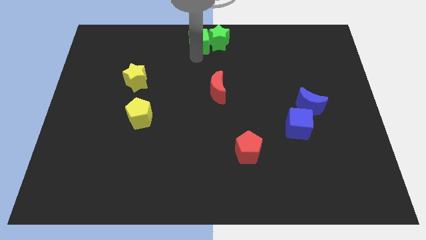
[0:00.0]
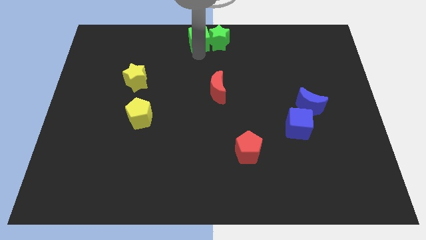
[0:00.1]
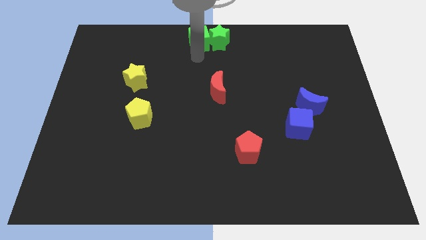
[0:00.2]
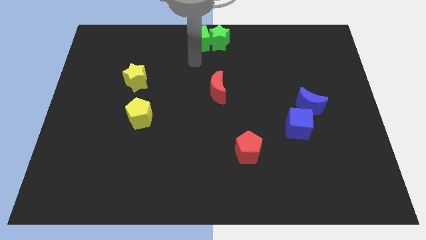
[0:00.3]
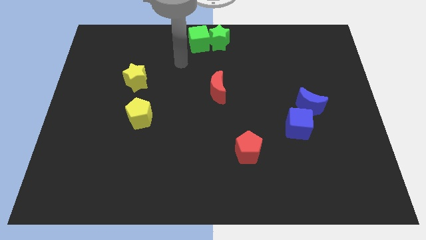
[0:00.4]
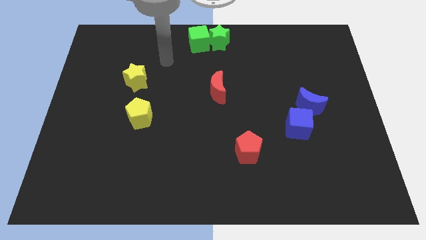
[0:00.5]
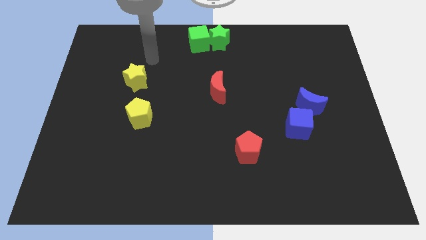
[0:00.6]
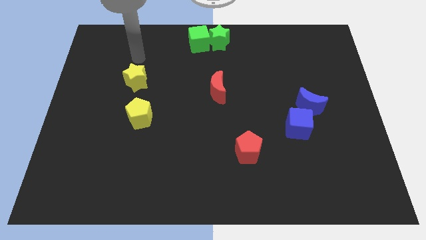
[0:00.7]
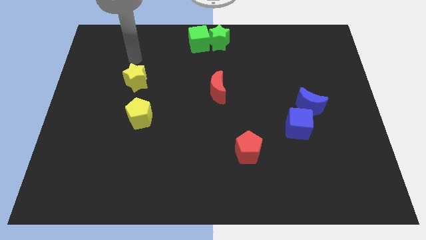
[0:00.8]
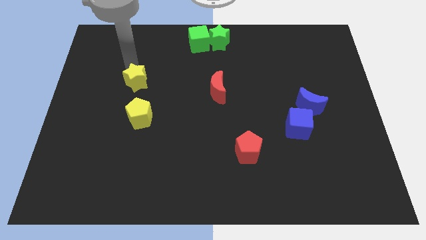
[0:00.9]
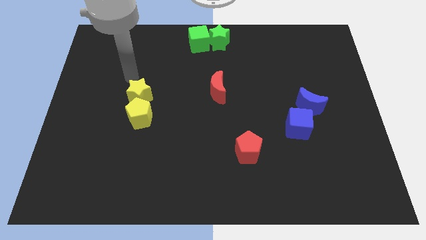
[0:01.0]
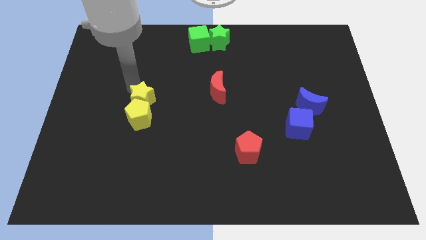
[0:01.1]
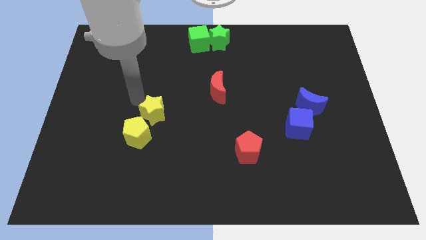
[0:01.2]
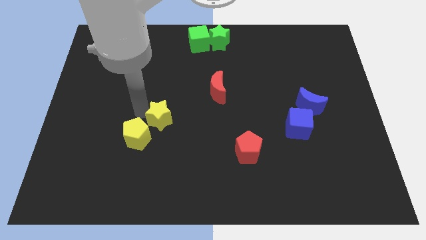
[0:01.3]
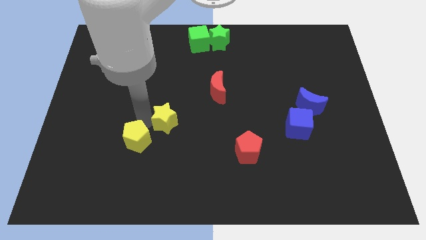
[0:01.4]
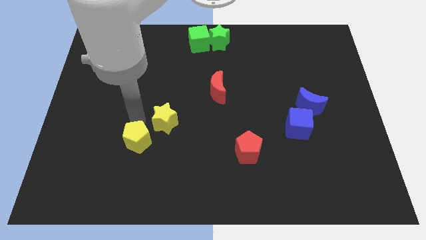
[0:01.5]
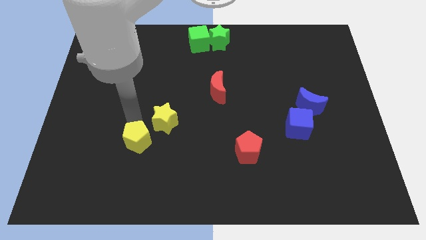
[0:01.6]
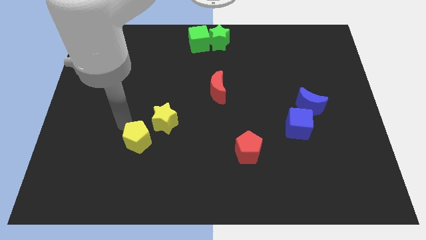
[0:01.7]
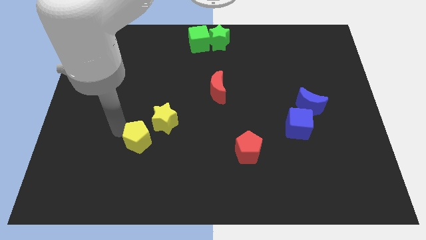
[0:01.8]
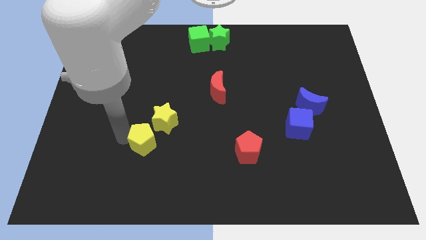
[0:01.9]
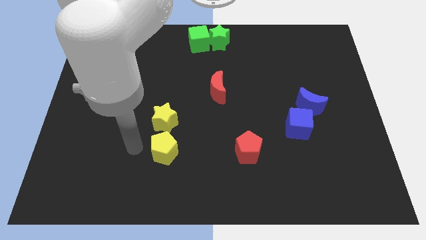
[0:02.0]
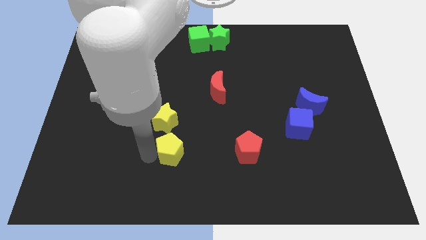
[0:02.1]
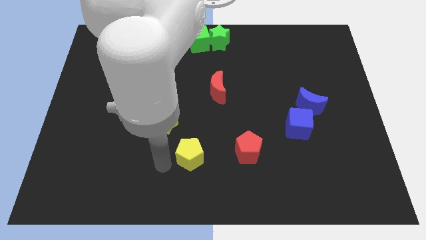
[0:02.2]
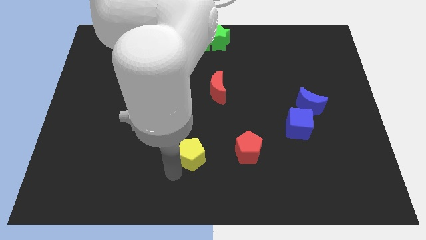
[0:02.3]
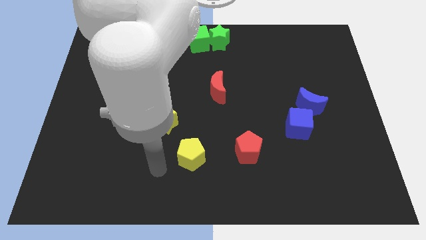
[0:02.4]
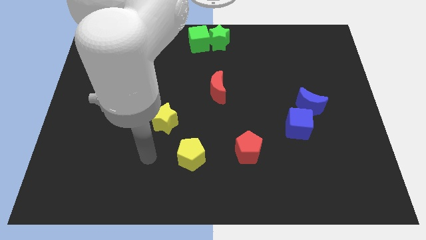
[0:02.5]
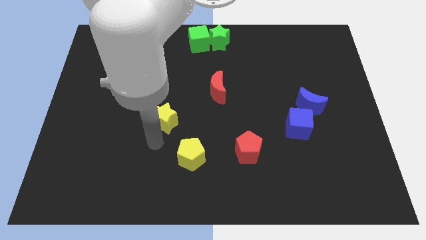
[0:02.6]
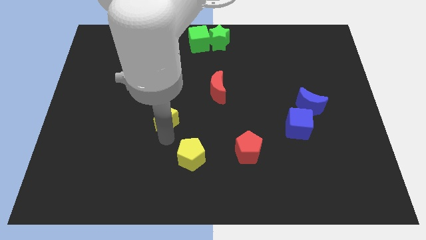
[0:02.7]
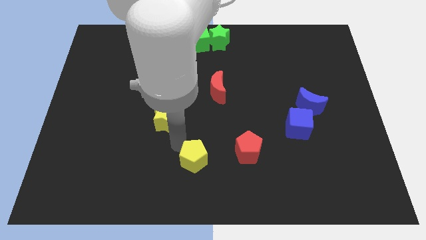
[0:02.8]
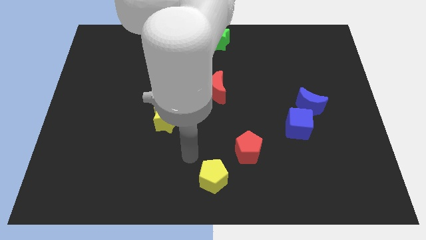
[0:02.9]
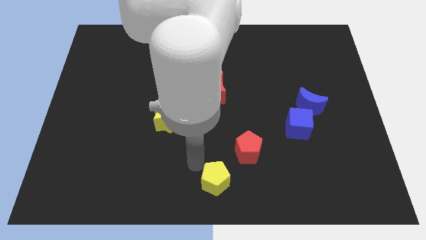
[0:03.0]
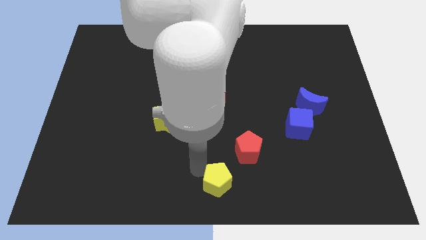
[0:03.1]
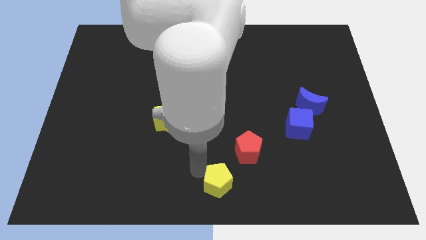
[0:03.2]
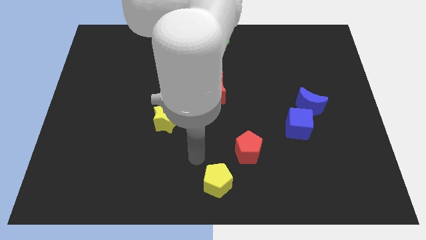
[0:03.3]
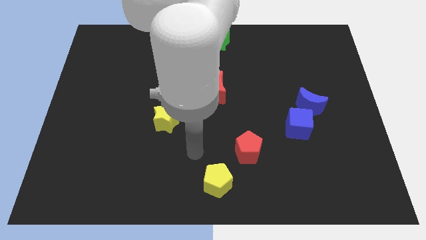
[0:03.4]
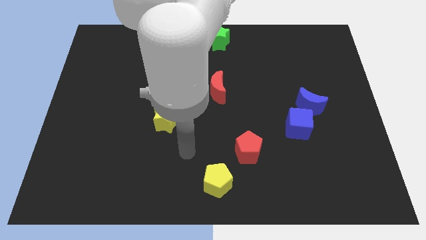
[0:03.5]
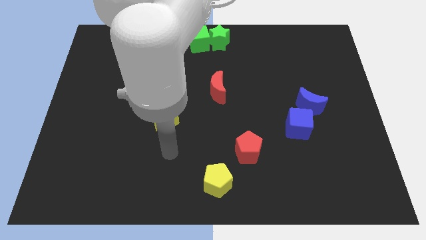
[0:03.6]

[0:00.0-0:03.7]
move the yellow pentagon to the bottom center of the board

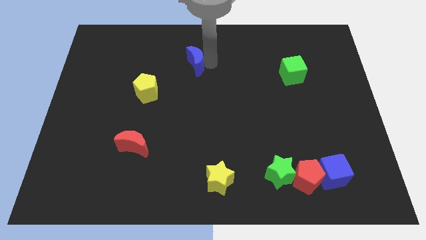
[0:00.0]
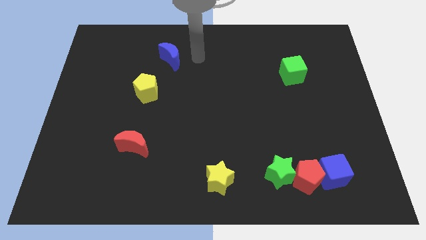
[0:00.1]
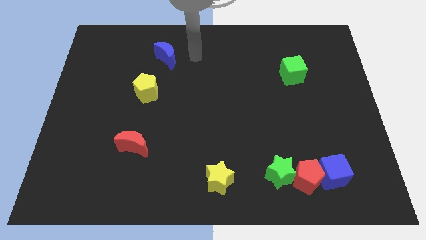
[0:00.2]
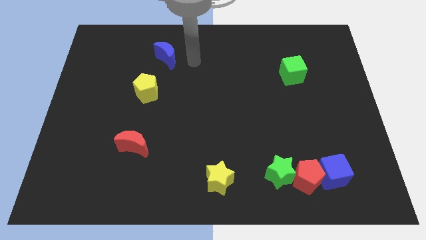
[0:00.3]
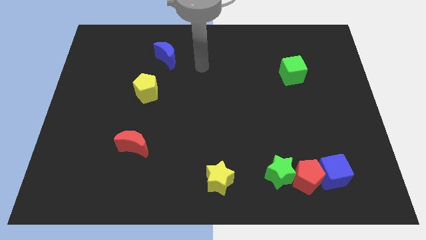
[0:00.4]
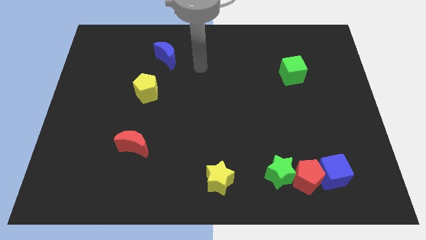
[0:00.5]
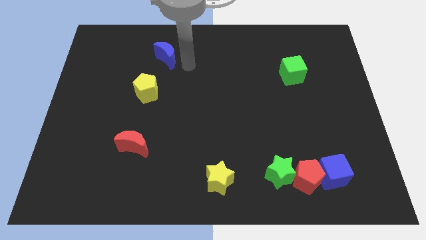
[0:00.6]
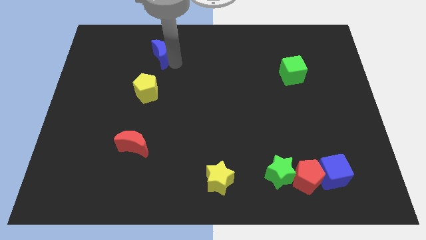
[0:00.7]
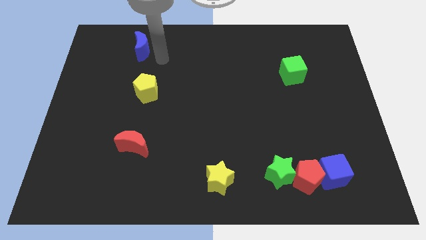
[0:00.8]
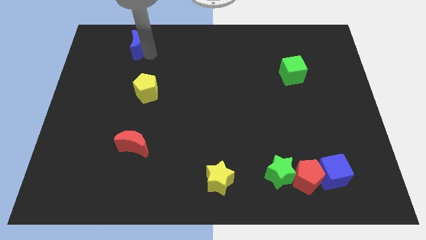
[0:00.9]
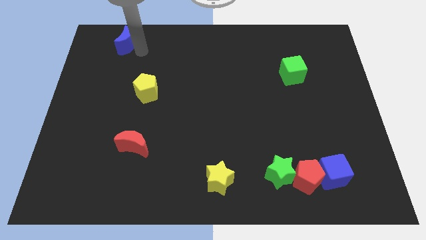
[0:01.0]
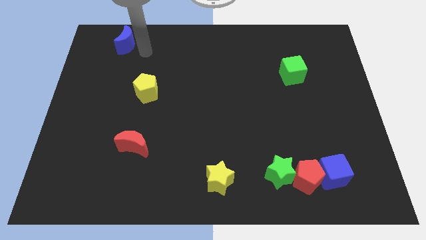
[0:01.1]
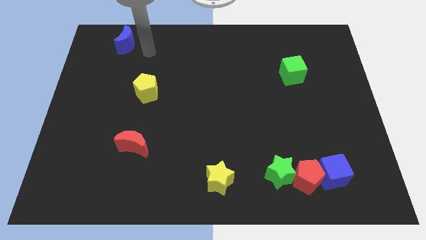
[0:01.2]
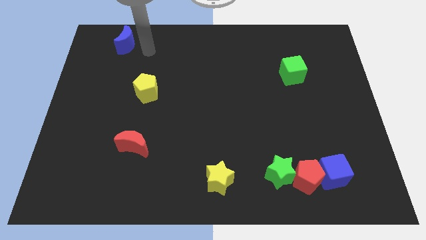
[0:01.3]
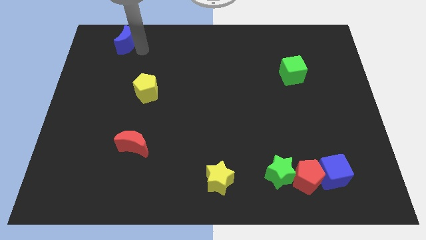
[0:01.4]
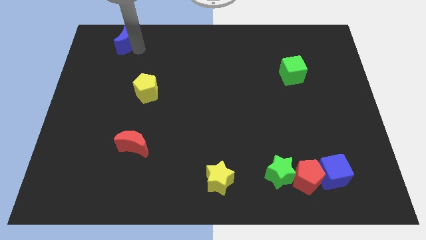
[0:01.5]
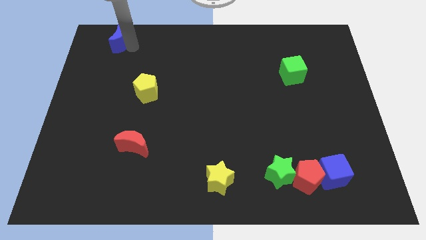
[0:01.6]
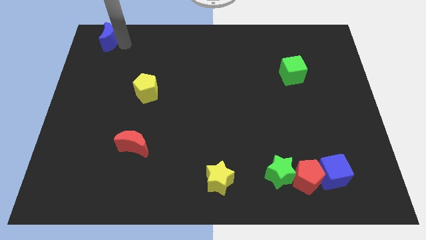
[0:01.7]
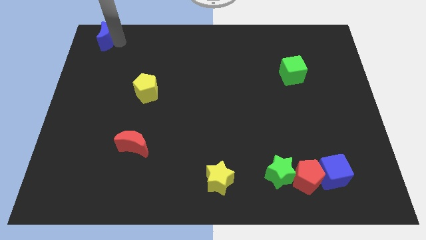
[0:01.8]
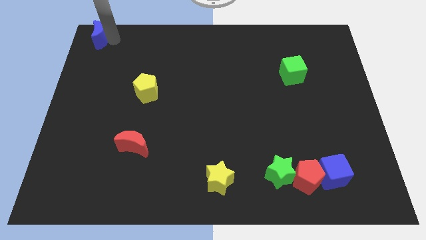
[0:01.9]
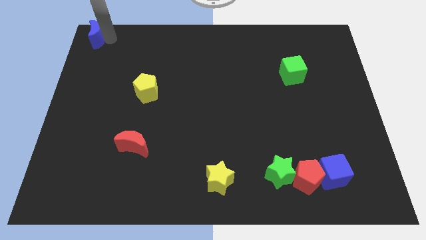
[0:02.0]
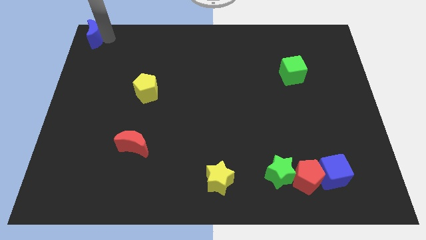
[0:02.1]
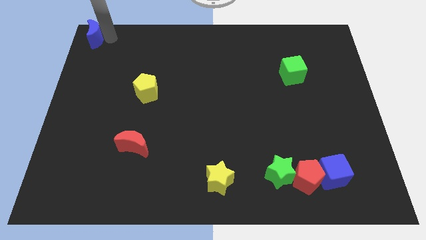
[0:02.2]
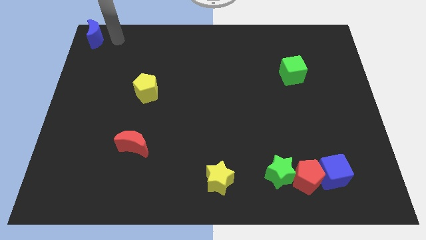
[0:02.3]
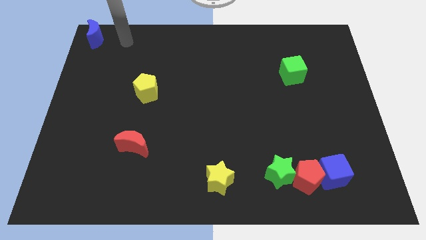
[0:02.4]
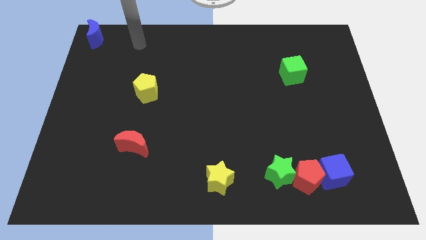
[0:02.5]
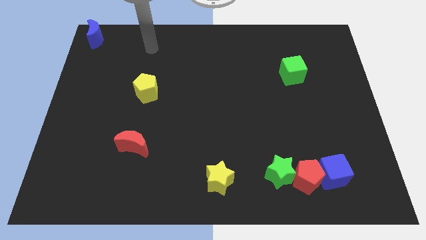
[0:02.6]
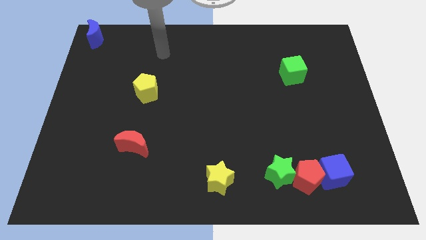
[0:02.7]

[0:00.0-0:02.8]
place the blue crescent to the top left side

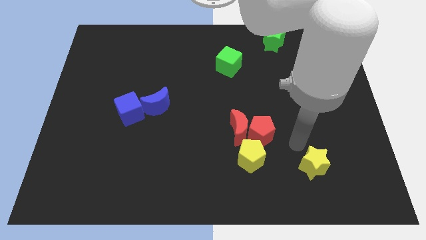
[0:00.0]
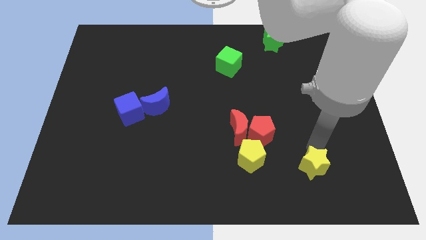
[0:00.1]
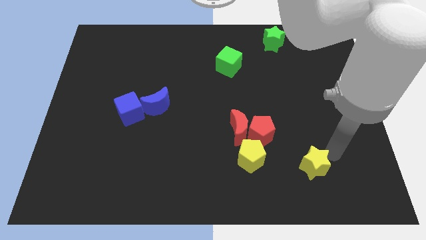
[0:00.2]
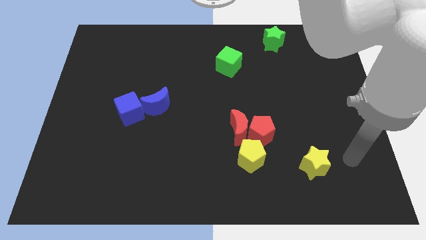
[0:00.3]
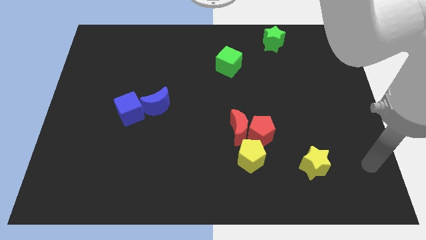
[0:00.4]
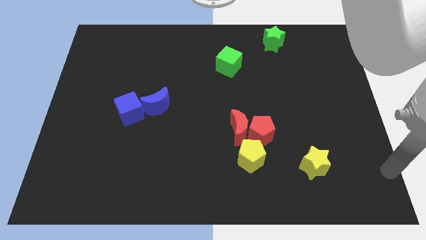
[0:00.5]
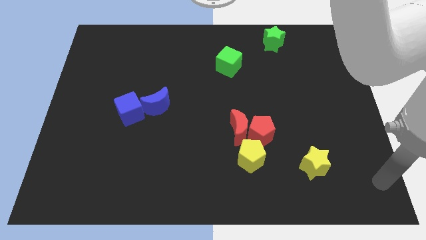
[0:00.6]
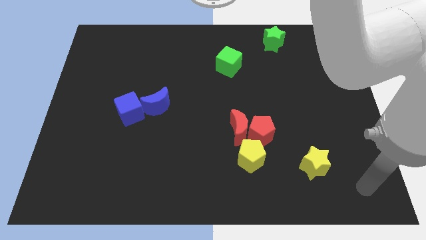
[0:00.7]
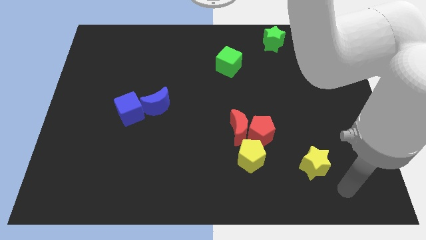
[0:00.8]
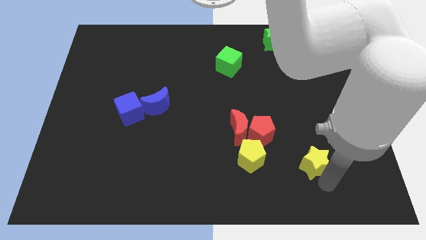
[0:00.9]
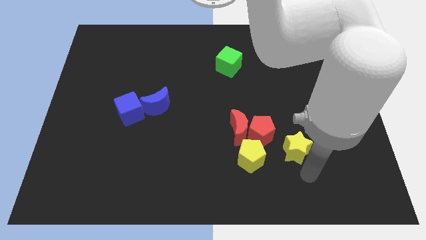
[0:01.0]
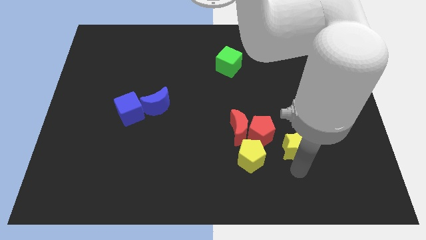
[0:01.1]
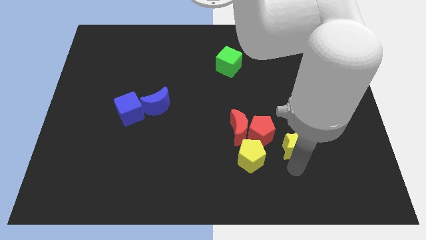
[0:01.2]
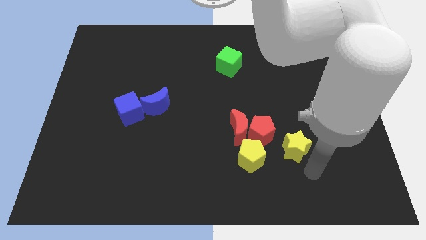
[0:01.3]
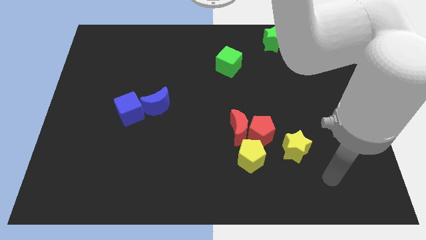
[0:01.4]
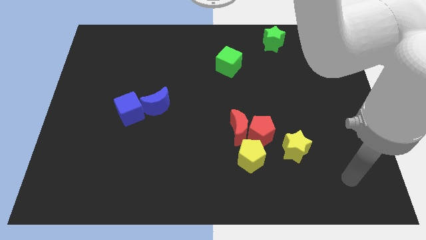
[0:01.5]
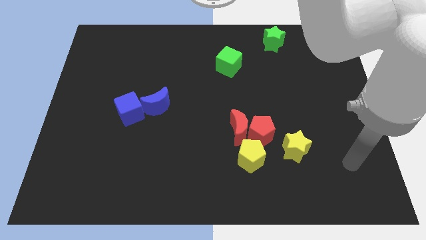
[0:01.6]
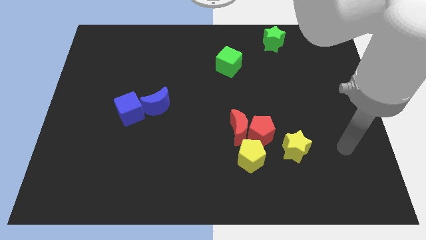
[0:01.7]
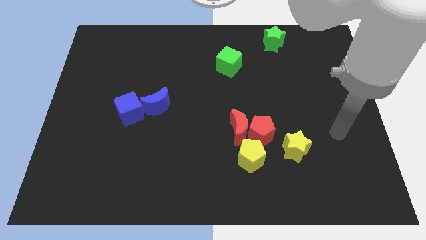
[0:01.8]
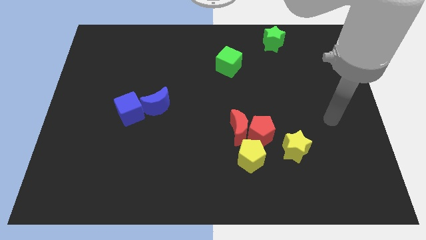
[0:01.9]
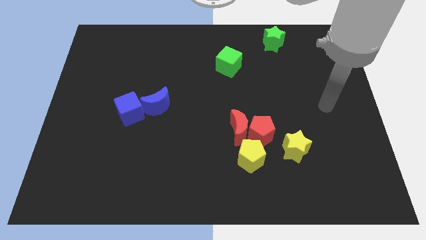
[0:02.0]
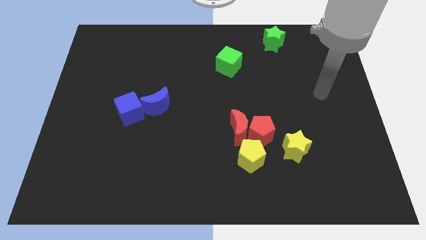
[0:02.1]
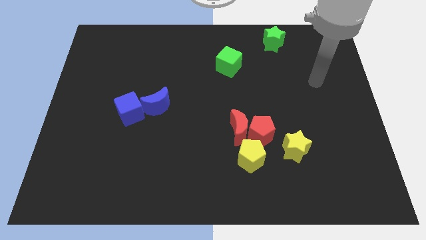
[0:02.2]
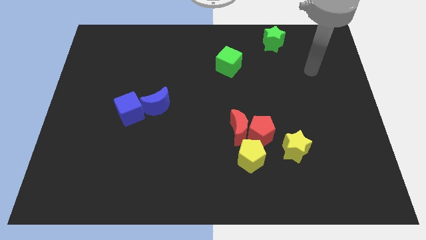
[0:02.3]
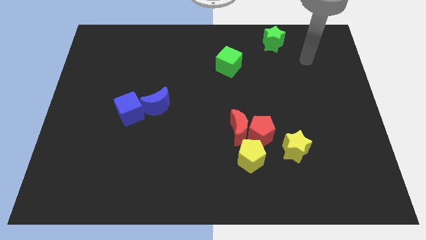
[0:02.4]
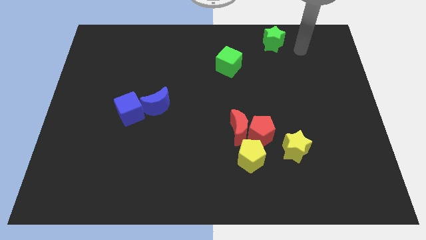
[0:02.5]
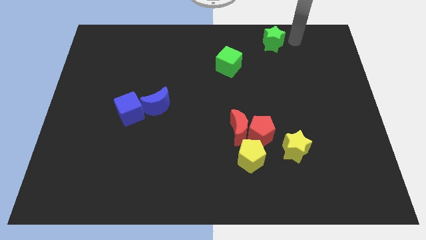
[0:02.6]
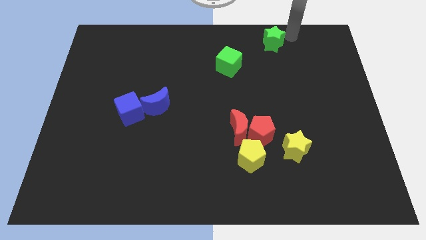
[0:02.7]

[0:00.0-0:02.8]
push the yellow star into the red pentagon
